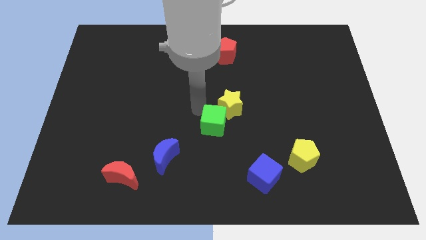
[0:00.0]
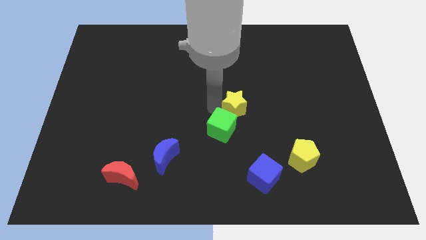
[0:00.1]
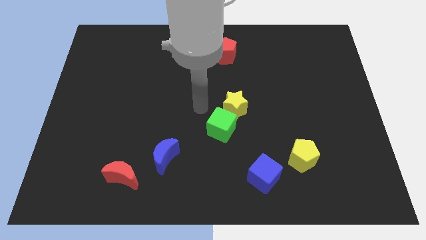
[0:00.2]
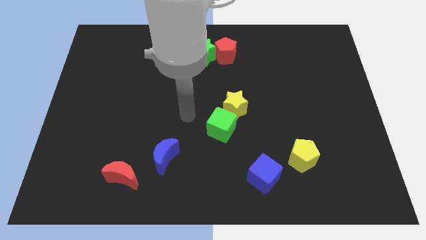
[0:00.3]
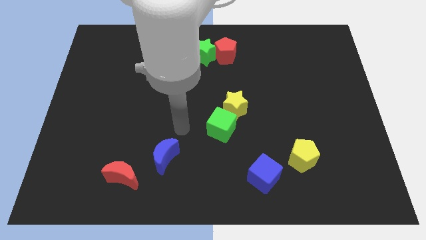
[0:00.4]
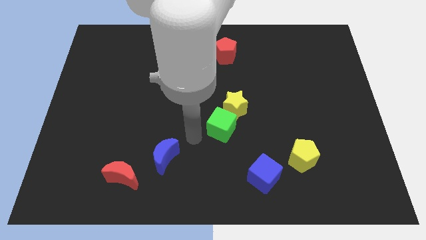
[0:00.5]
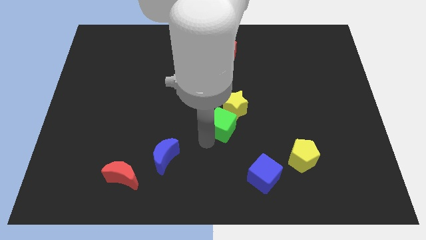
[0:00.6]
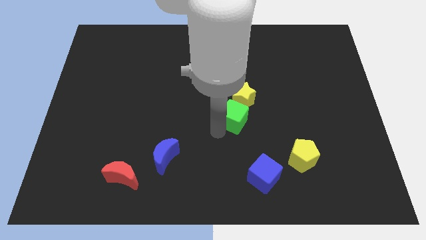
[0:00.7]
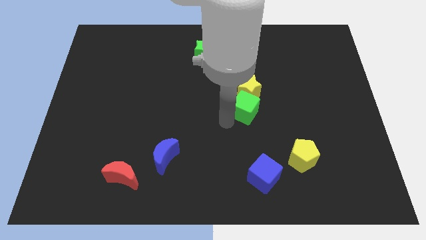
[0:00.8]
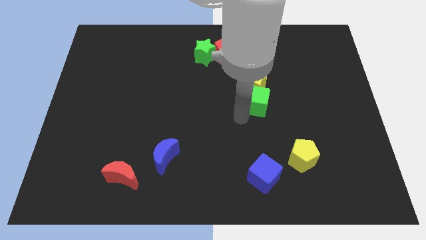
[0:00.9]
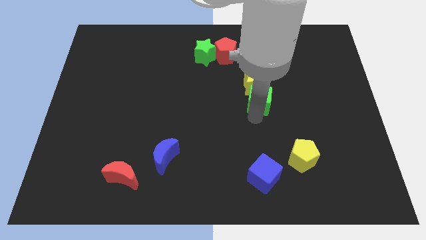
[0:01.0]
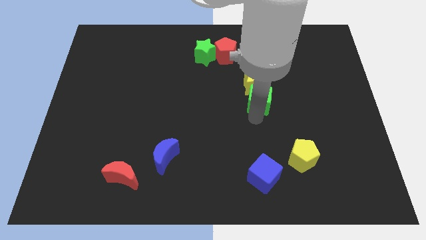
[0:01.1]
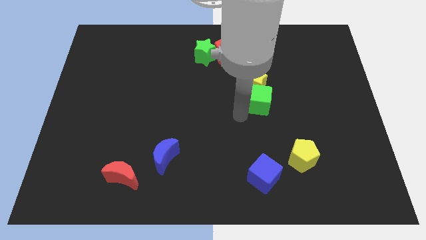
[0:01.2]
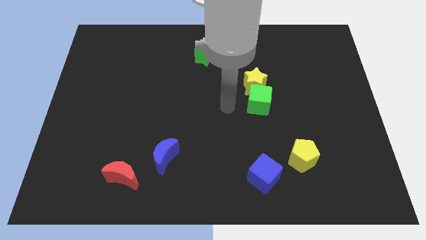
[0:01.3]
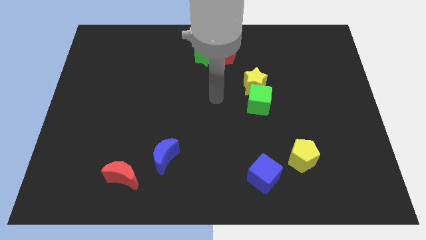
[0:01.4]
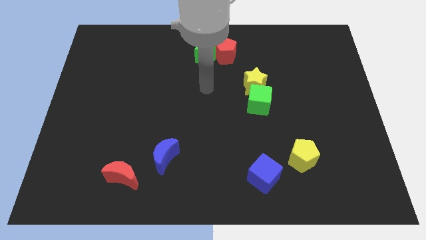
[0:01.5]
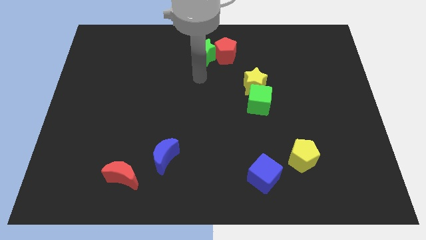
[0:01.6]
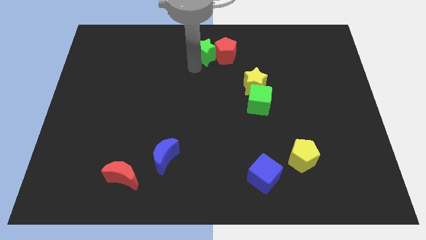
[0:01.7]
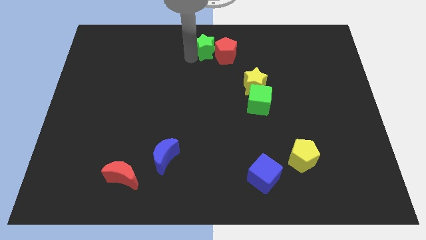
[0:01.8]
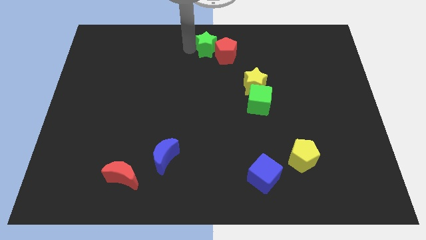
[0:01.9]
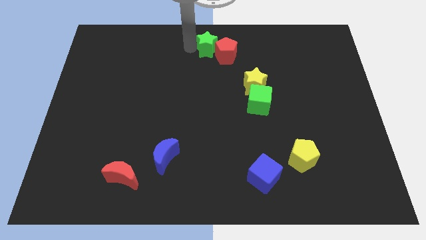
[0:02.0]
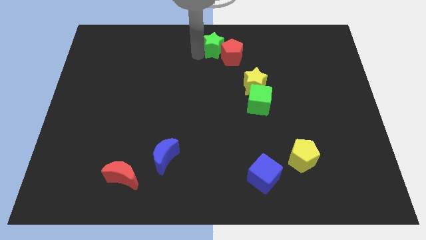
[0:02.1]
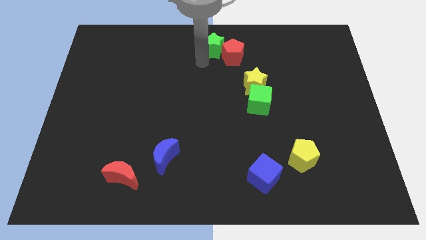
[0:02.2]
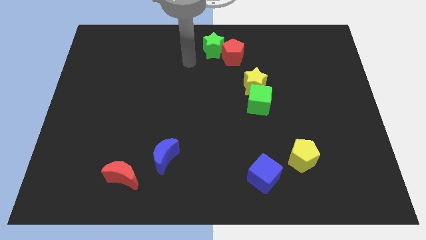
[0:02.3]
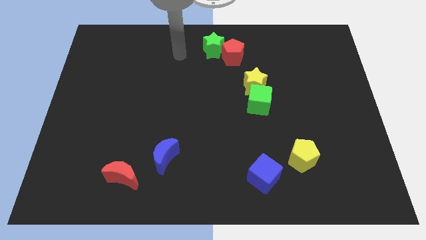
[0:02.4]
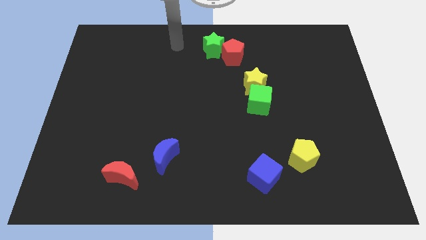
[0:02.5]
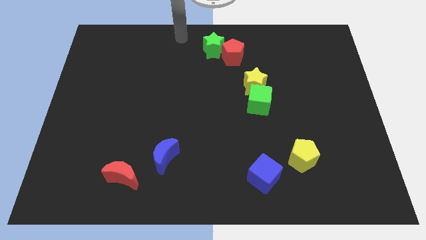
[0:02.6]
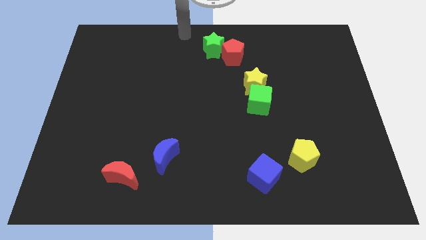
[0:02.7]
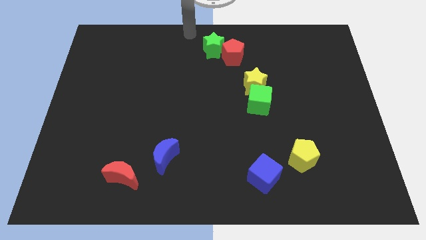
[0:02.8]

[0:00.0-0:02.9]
move your arm away from the green cube

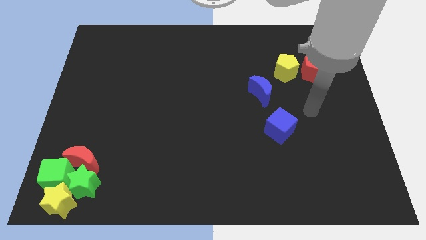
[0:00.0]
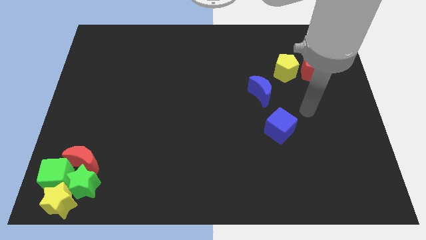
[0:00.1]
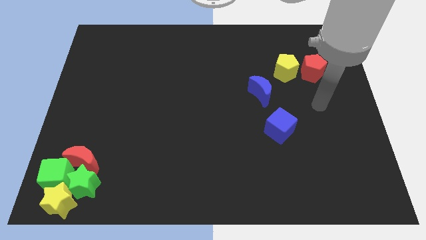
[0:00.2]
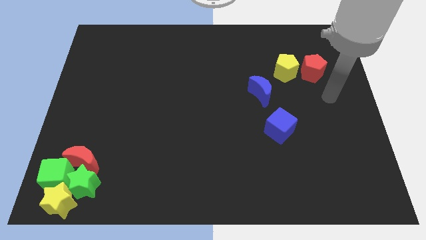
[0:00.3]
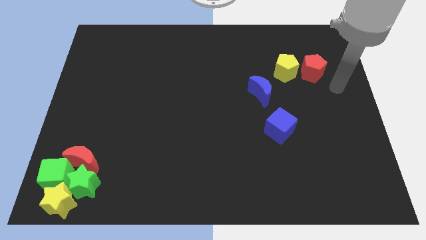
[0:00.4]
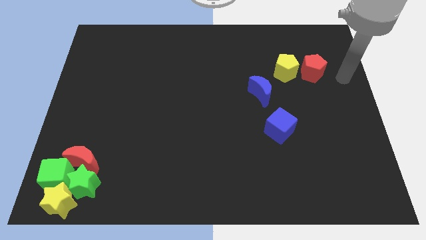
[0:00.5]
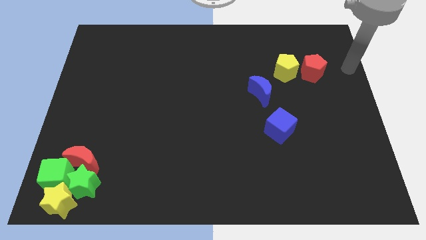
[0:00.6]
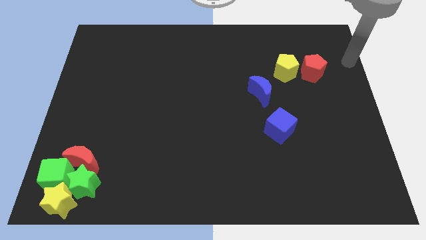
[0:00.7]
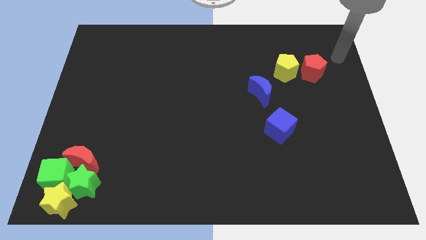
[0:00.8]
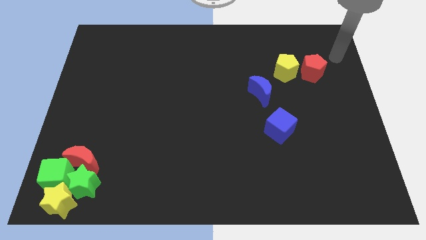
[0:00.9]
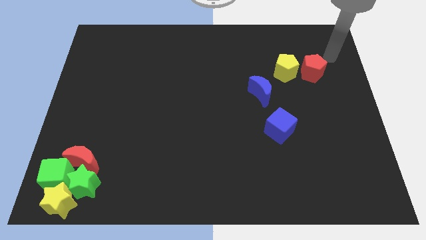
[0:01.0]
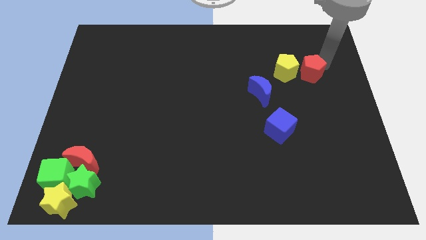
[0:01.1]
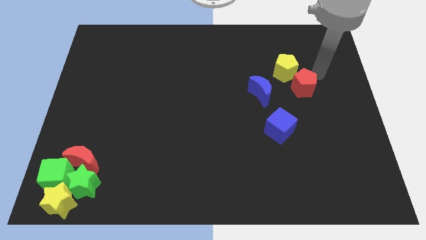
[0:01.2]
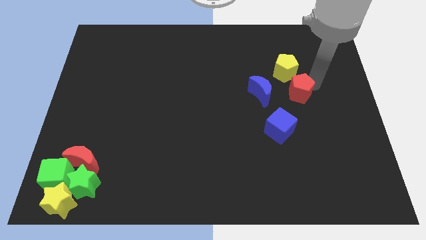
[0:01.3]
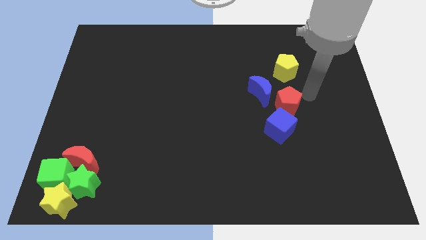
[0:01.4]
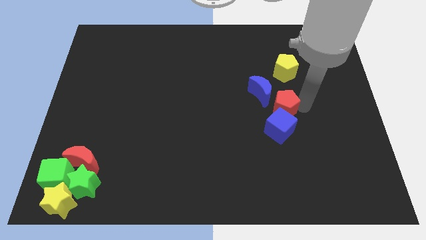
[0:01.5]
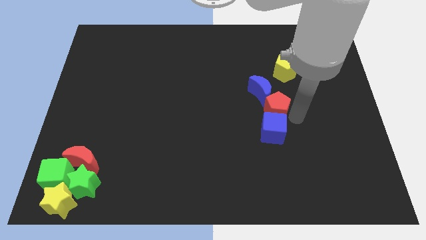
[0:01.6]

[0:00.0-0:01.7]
push the red pentagon into the blue moon

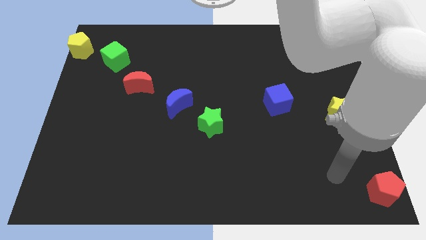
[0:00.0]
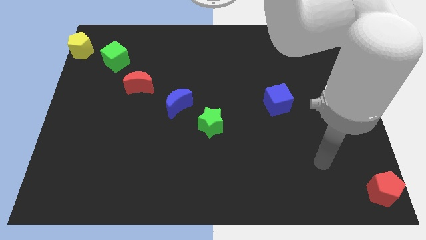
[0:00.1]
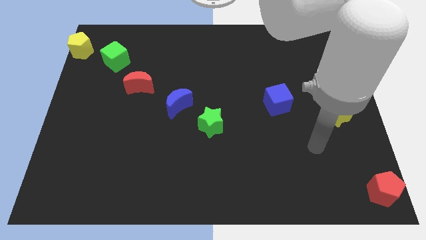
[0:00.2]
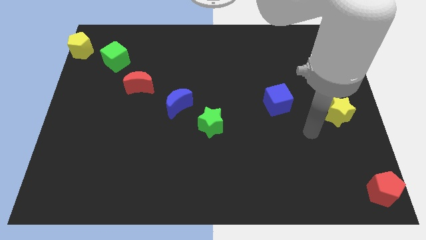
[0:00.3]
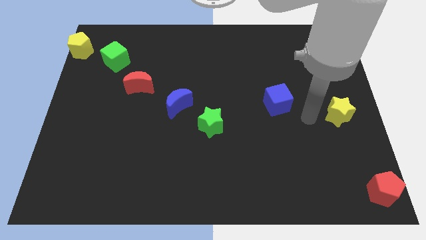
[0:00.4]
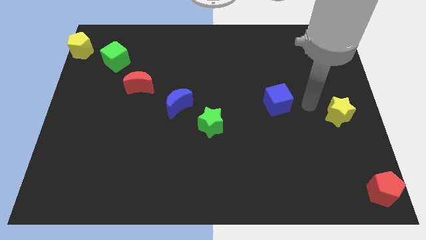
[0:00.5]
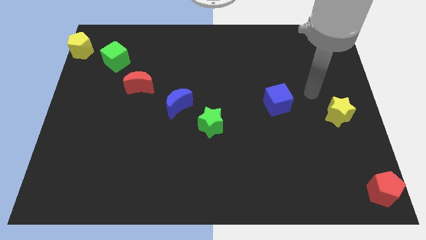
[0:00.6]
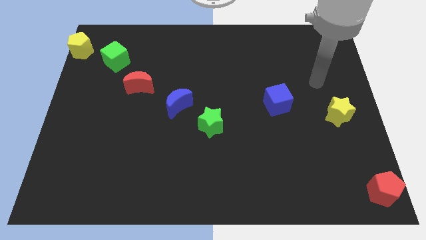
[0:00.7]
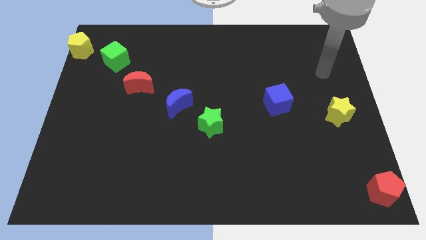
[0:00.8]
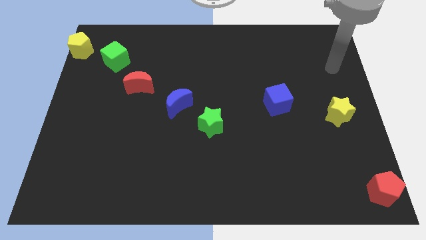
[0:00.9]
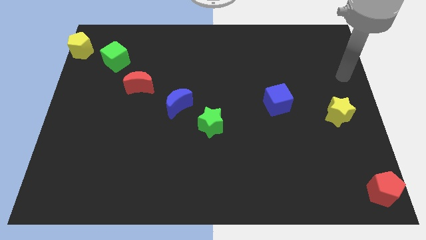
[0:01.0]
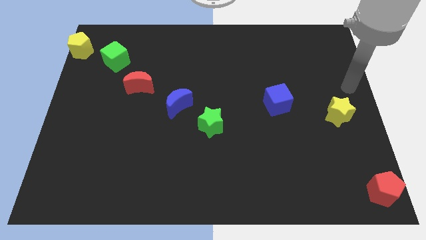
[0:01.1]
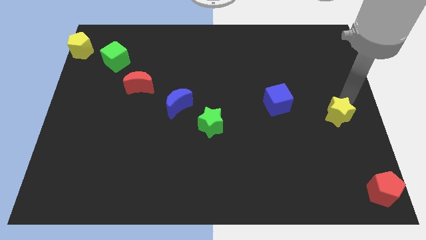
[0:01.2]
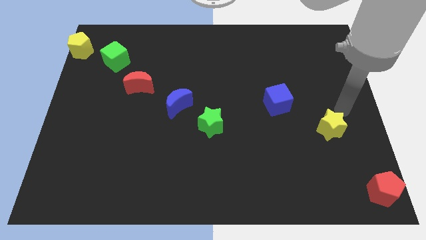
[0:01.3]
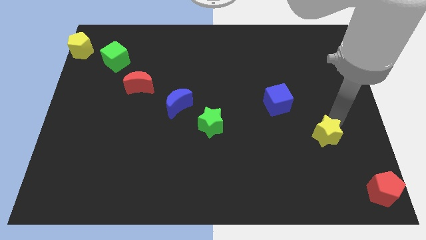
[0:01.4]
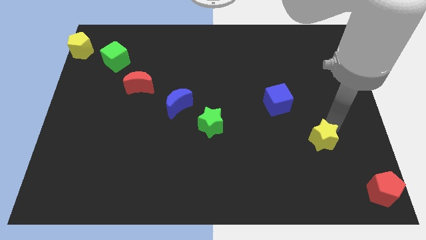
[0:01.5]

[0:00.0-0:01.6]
slightly move the yellow star diagonally bottom right to the blue cube

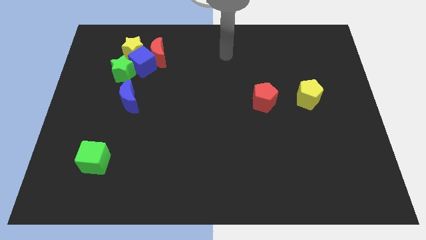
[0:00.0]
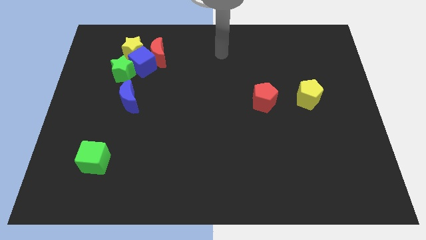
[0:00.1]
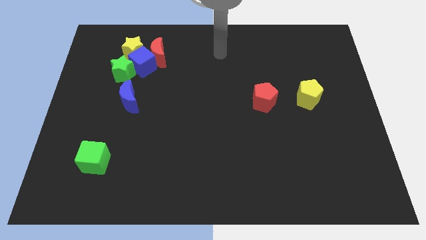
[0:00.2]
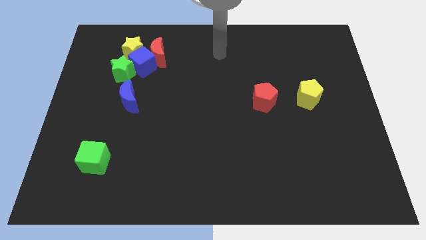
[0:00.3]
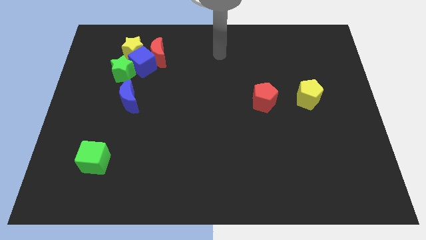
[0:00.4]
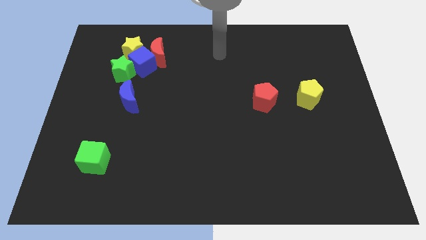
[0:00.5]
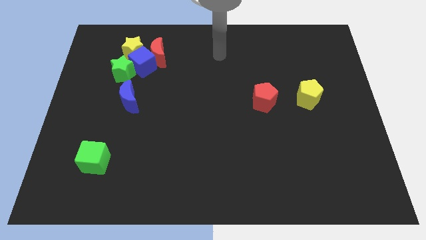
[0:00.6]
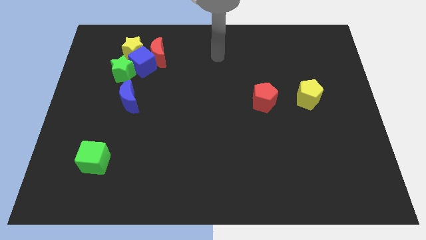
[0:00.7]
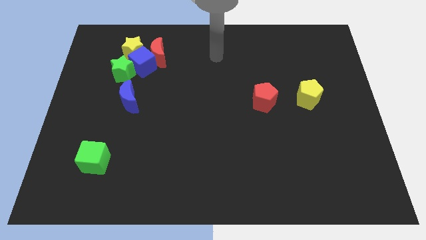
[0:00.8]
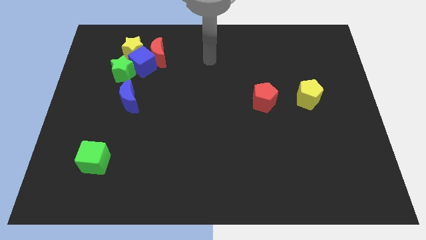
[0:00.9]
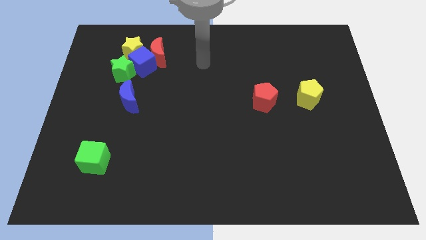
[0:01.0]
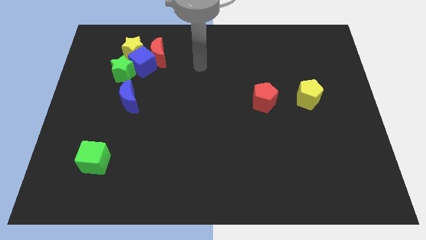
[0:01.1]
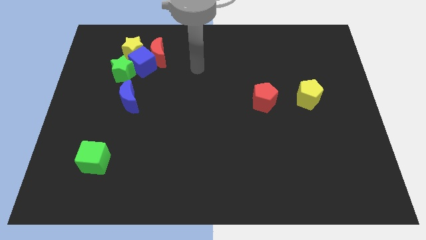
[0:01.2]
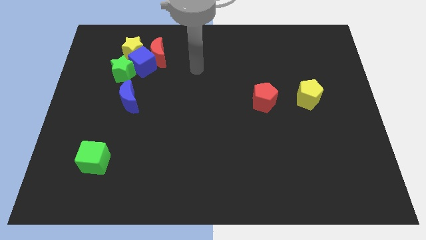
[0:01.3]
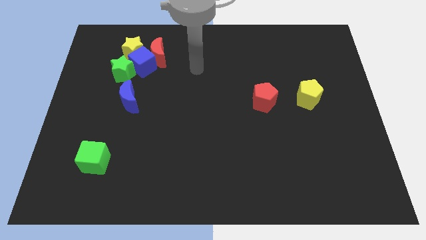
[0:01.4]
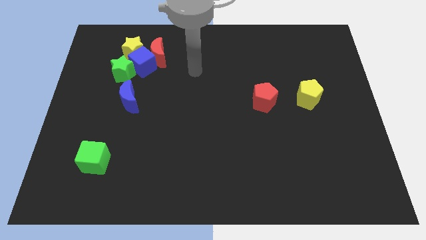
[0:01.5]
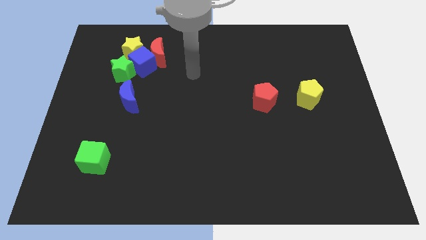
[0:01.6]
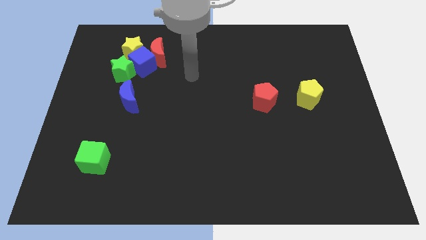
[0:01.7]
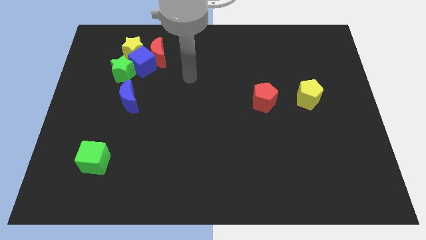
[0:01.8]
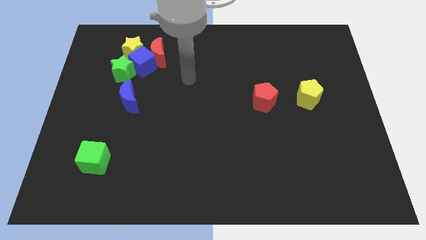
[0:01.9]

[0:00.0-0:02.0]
move your arm towards the bottom left side of the board

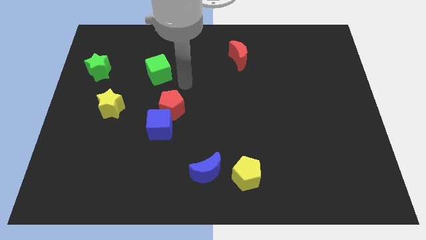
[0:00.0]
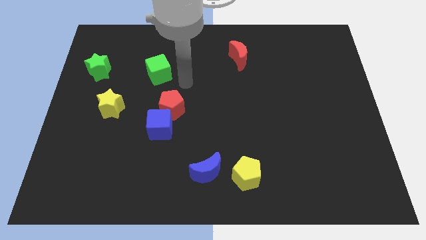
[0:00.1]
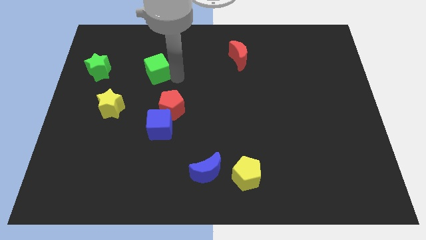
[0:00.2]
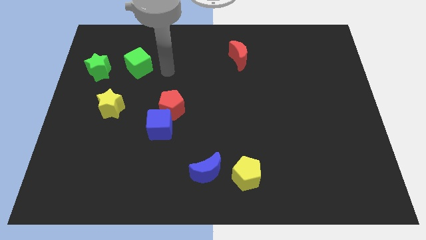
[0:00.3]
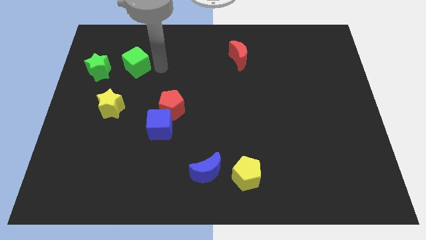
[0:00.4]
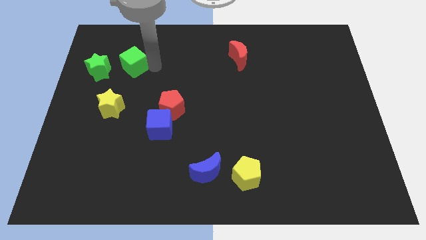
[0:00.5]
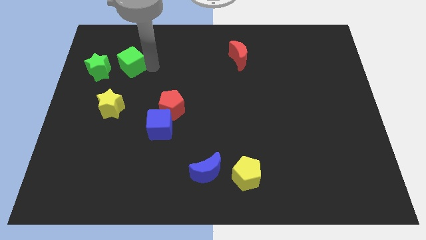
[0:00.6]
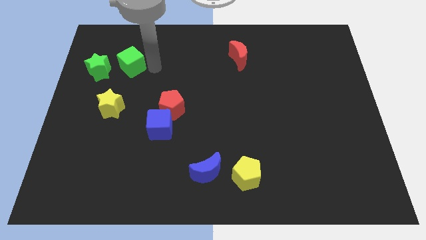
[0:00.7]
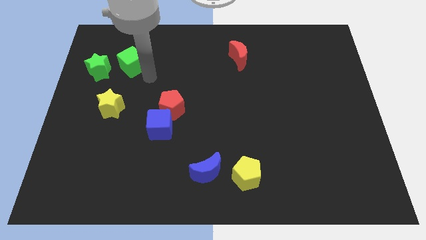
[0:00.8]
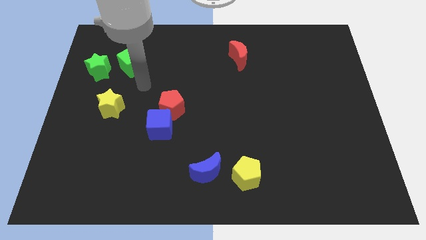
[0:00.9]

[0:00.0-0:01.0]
push the green cube close to the green star
